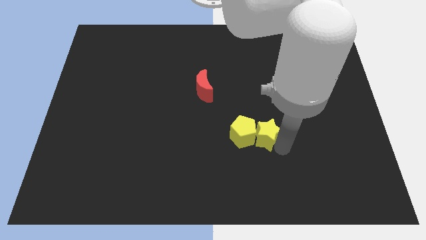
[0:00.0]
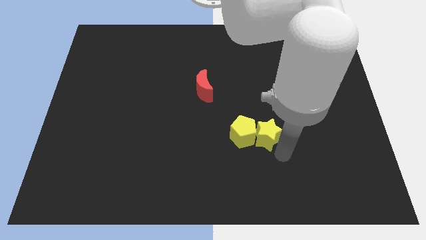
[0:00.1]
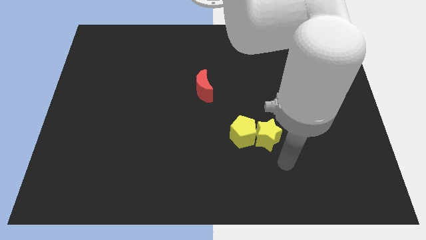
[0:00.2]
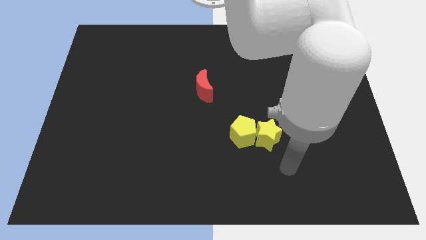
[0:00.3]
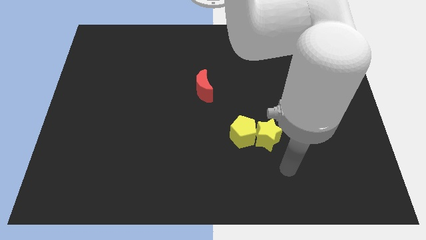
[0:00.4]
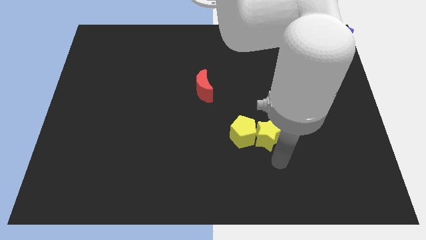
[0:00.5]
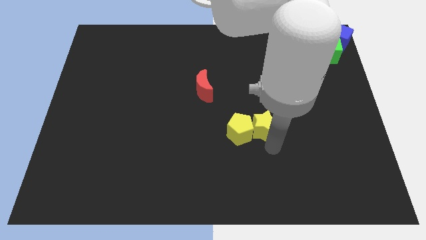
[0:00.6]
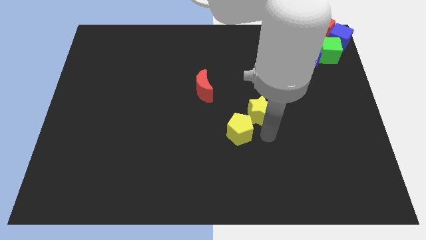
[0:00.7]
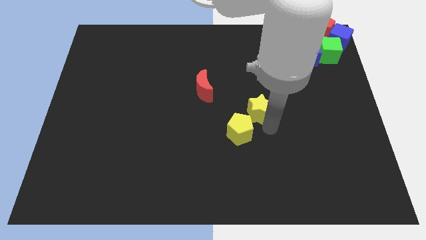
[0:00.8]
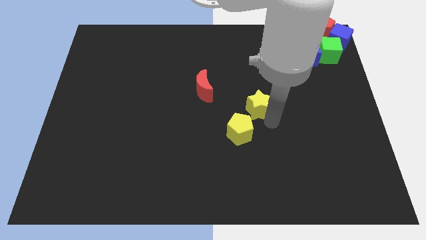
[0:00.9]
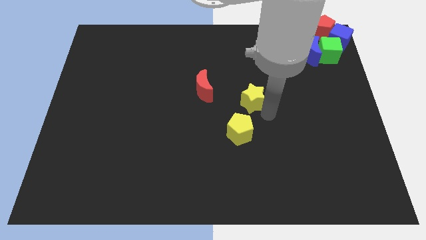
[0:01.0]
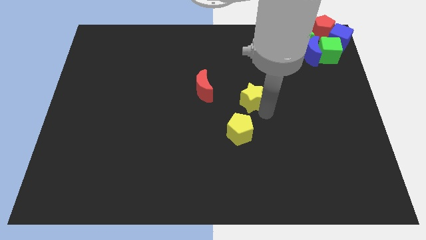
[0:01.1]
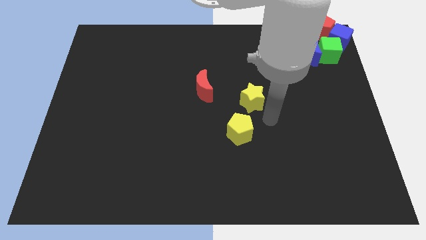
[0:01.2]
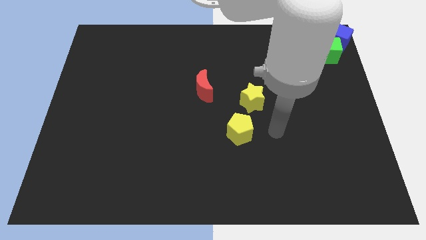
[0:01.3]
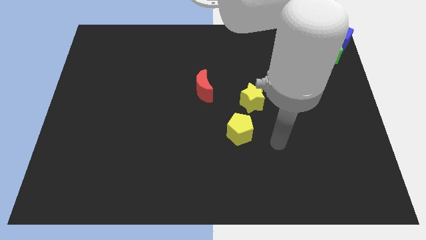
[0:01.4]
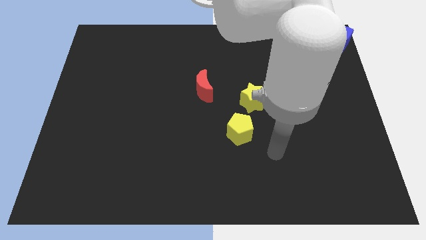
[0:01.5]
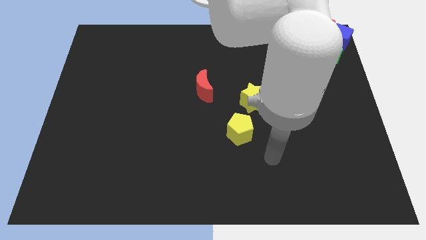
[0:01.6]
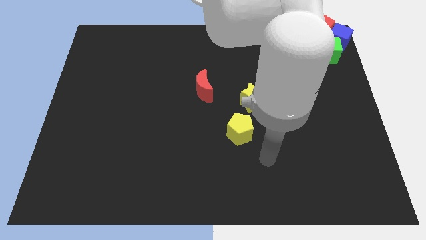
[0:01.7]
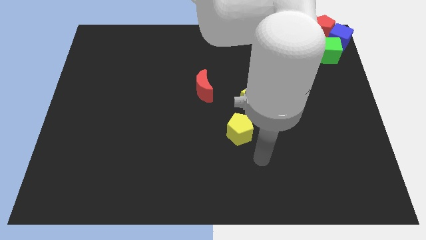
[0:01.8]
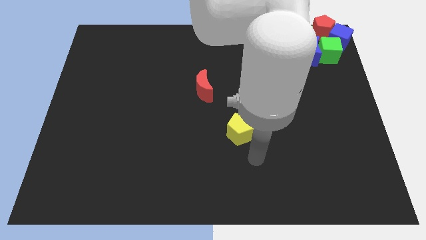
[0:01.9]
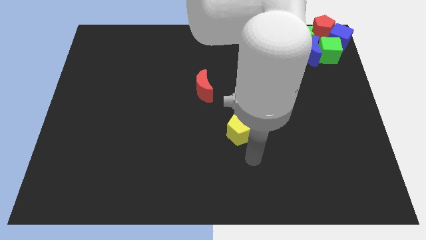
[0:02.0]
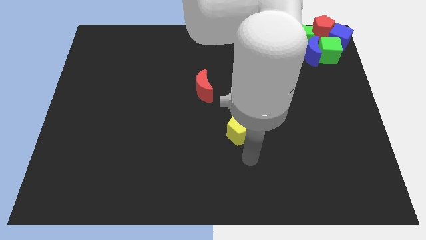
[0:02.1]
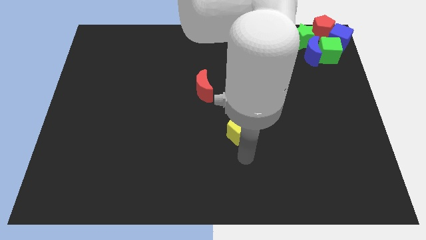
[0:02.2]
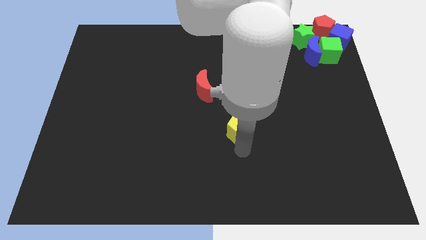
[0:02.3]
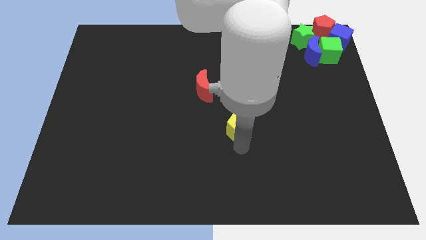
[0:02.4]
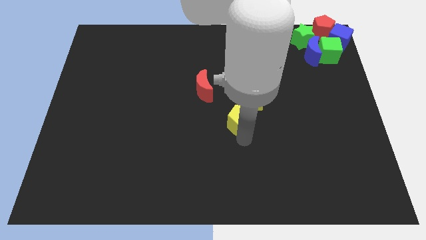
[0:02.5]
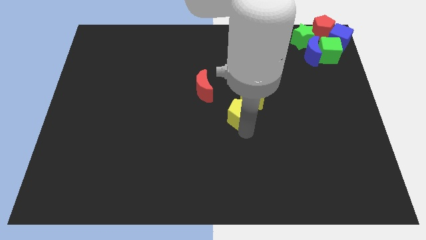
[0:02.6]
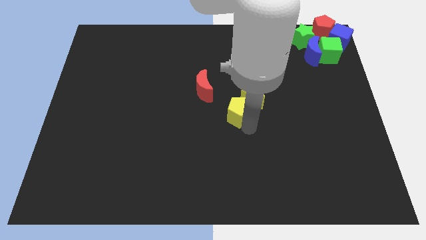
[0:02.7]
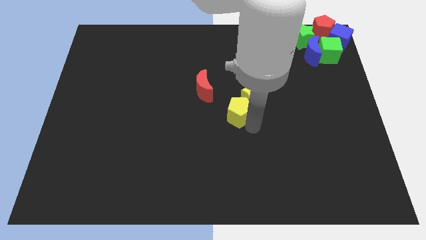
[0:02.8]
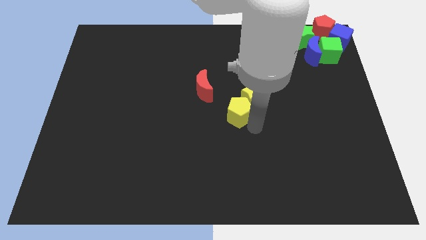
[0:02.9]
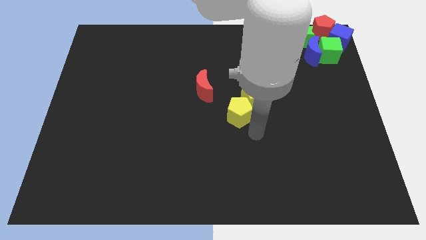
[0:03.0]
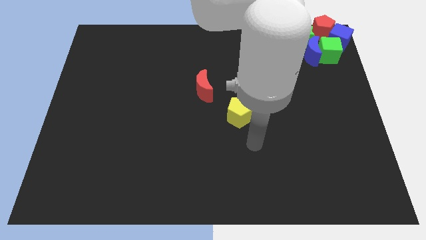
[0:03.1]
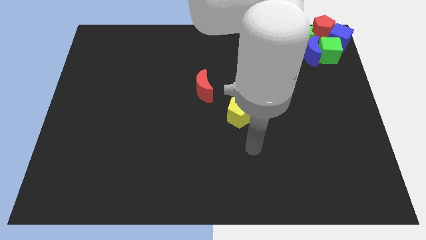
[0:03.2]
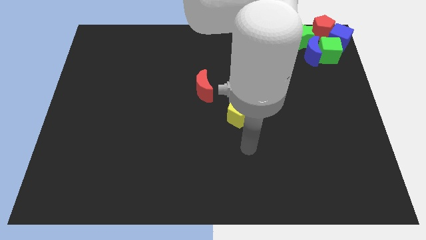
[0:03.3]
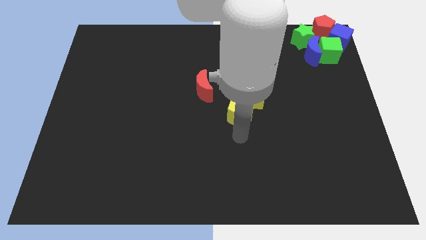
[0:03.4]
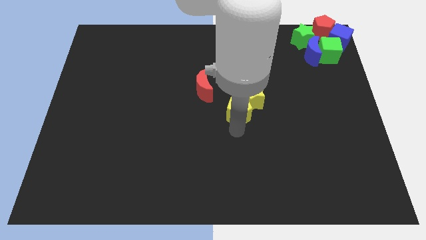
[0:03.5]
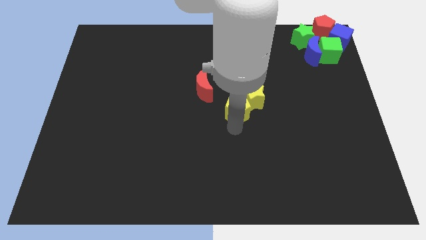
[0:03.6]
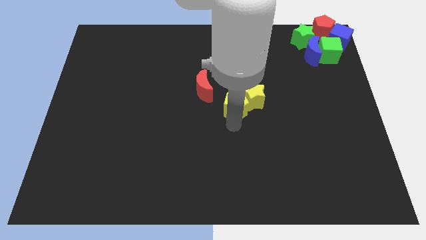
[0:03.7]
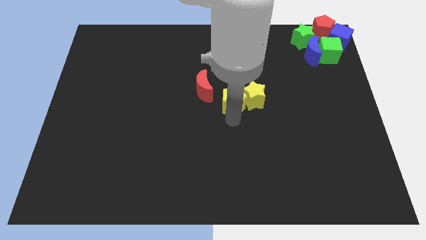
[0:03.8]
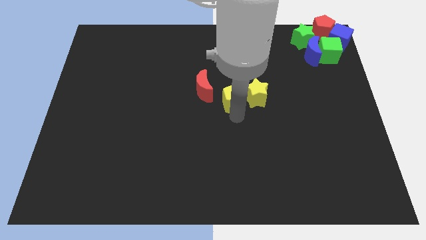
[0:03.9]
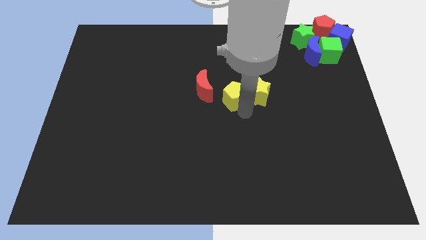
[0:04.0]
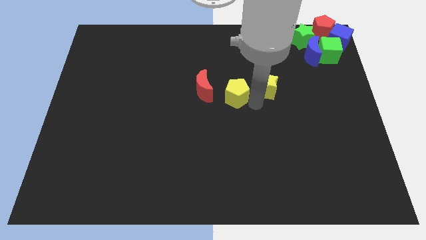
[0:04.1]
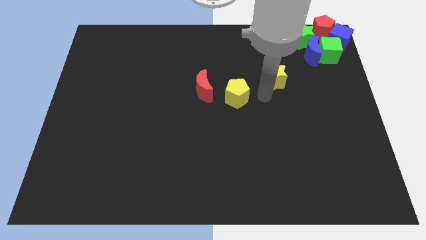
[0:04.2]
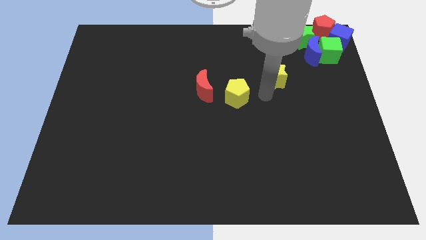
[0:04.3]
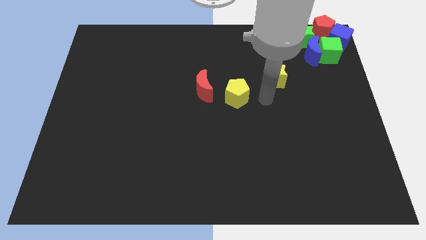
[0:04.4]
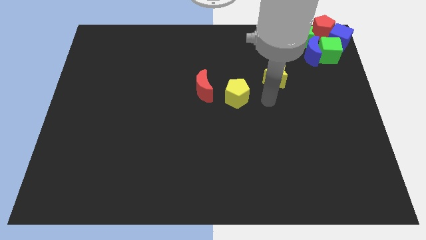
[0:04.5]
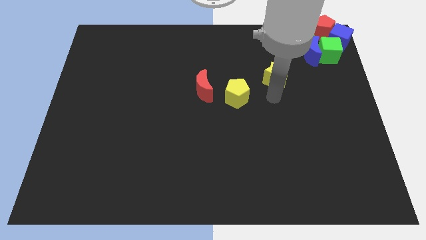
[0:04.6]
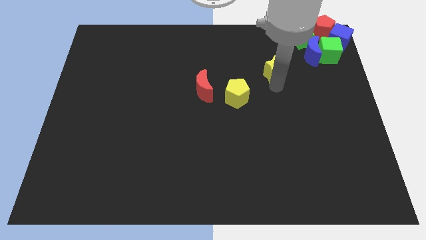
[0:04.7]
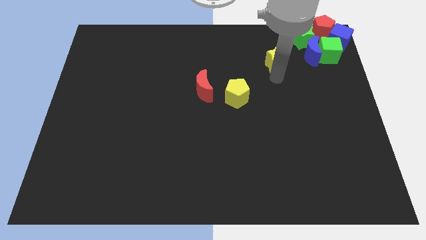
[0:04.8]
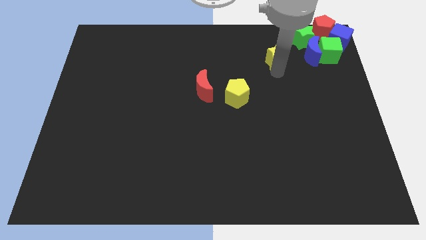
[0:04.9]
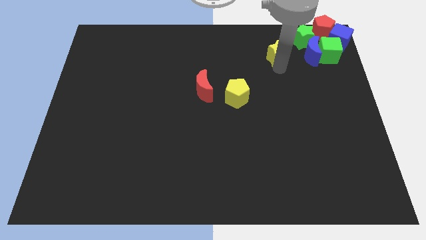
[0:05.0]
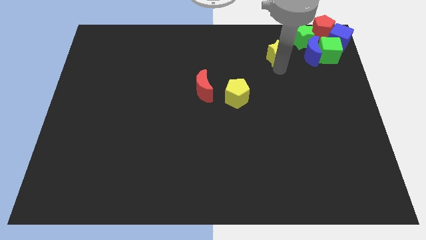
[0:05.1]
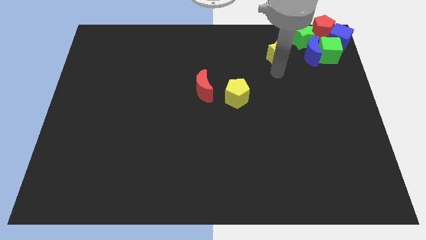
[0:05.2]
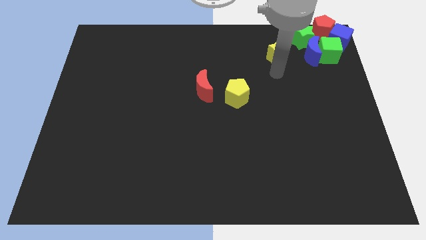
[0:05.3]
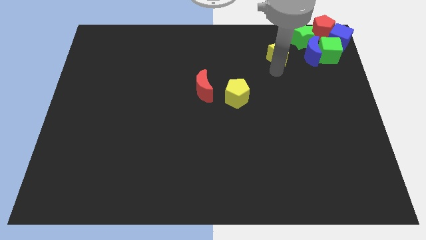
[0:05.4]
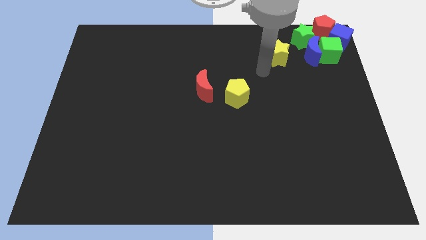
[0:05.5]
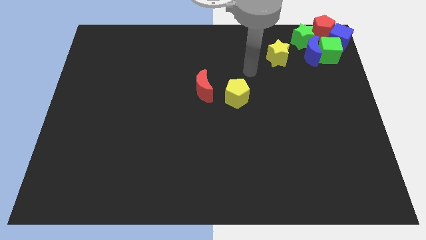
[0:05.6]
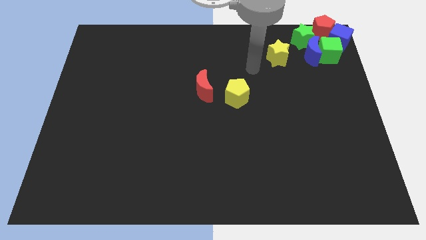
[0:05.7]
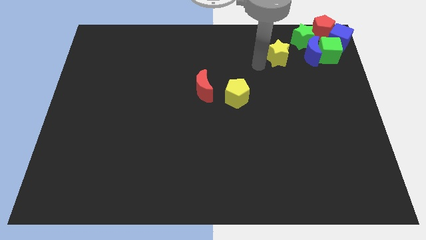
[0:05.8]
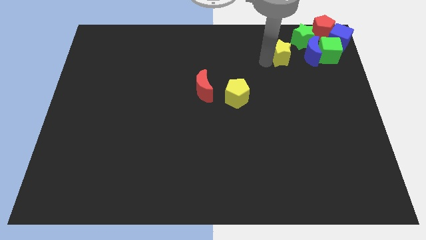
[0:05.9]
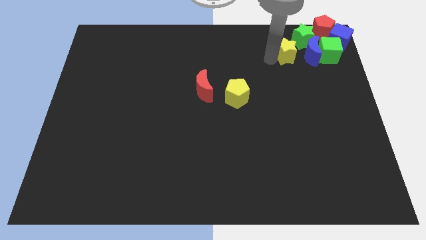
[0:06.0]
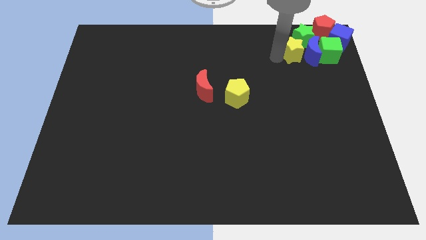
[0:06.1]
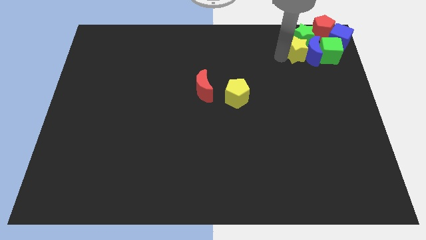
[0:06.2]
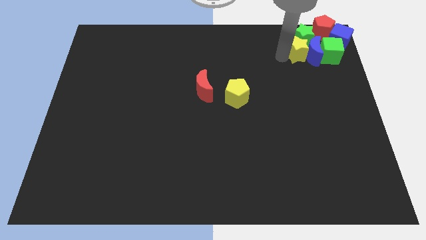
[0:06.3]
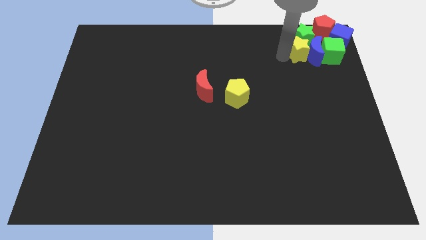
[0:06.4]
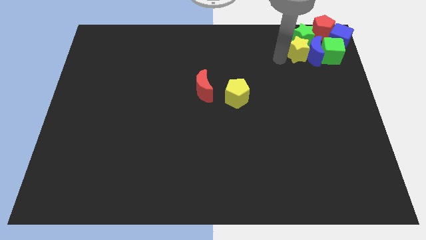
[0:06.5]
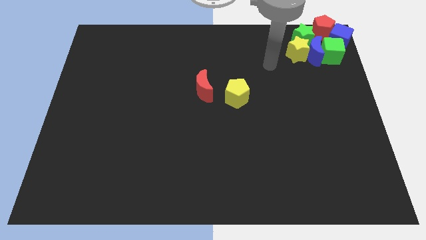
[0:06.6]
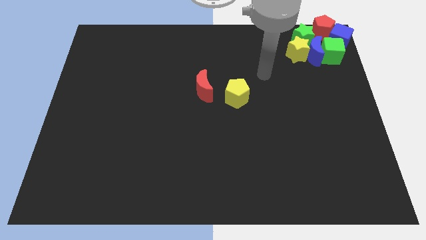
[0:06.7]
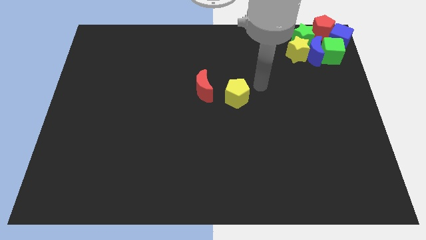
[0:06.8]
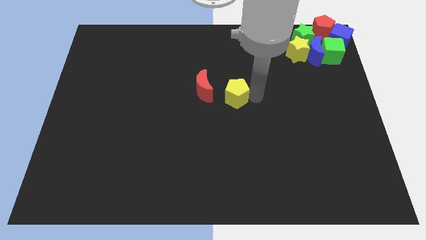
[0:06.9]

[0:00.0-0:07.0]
place the yellow star below the green star

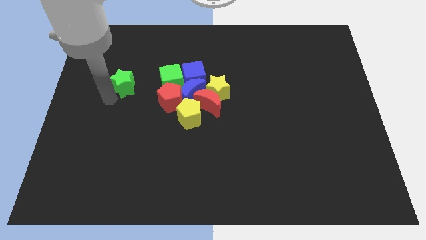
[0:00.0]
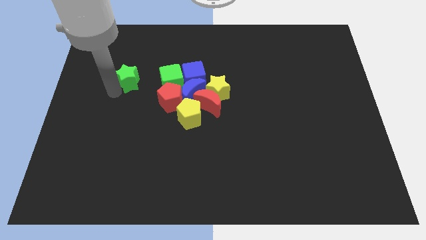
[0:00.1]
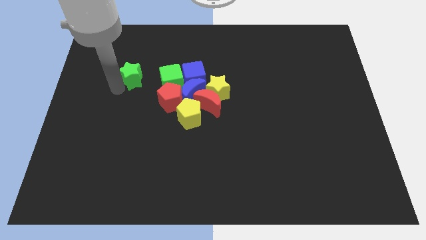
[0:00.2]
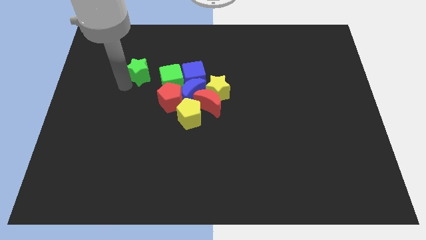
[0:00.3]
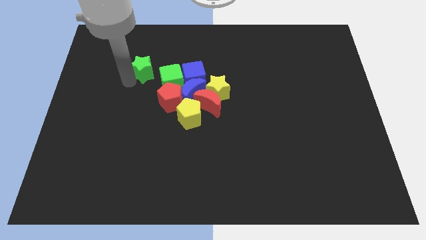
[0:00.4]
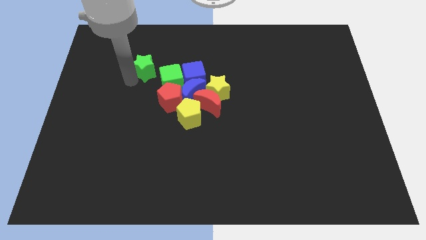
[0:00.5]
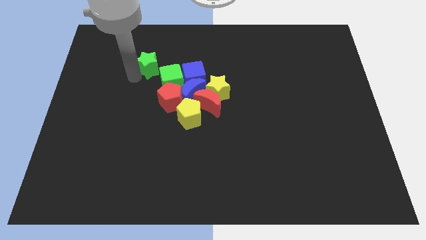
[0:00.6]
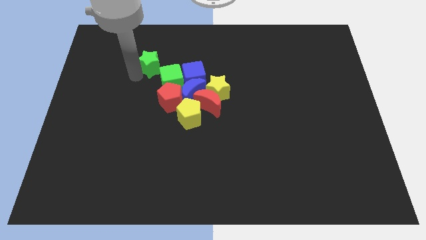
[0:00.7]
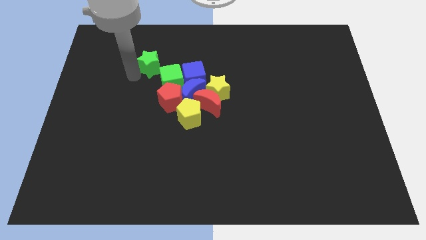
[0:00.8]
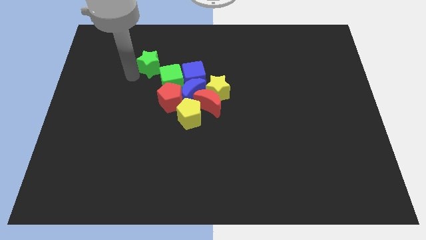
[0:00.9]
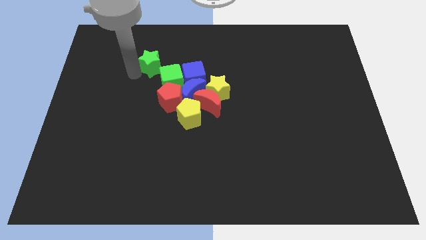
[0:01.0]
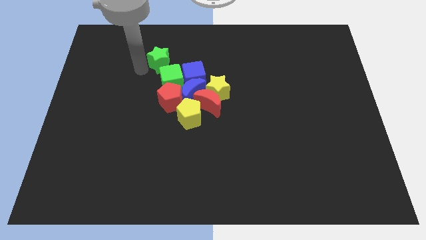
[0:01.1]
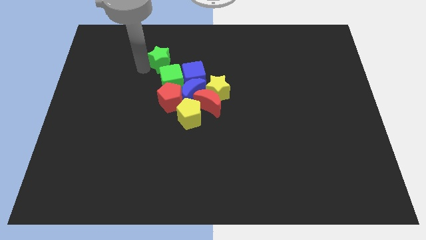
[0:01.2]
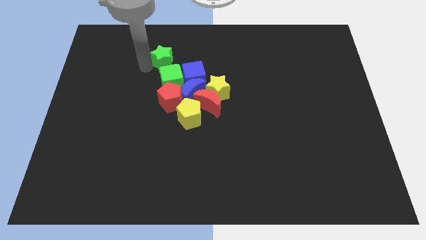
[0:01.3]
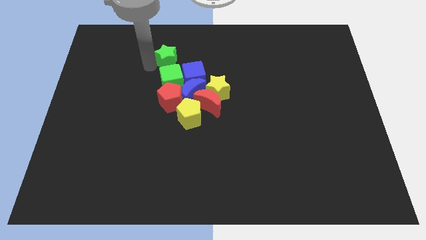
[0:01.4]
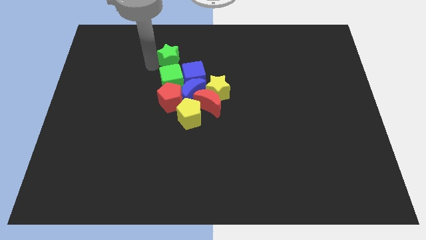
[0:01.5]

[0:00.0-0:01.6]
push the green star to the top of the green cube

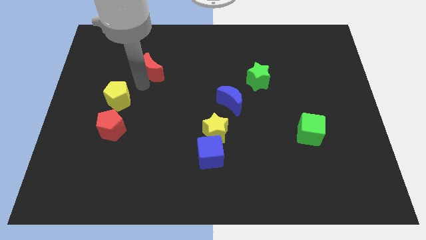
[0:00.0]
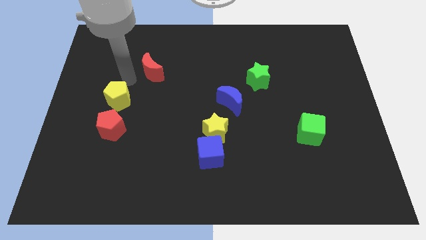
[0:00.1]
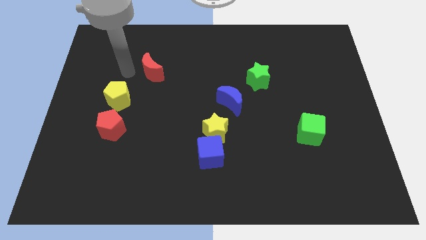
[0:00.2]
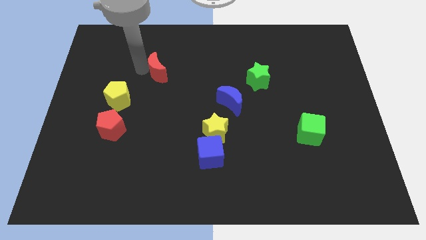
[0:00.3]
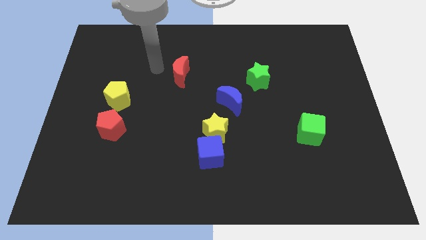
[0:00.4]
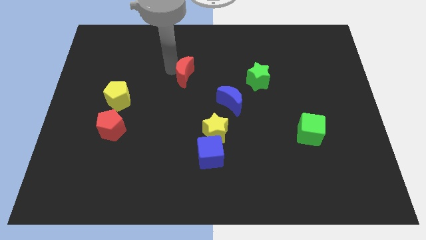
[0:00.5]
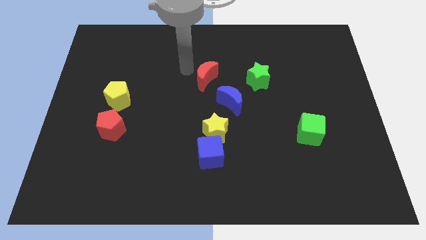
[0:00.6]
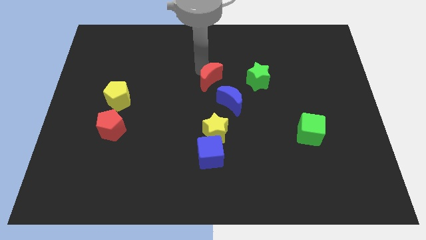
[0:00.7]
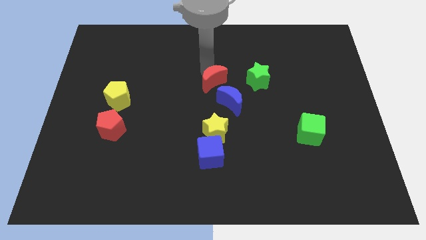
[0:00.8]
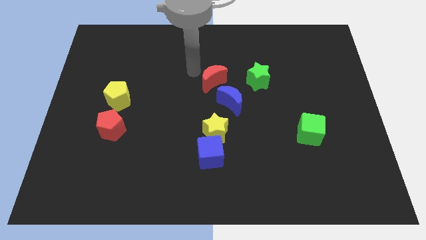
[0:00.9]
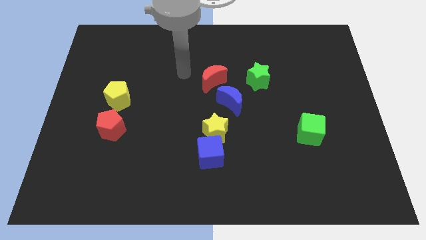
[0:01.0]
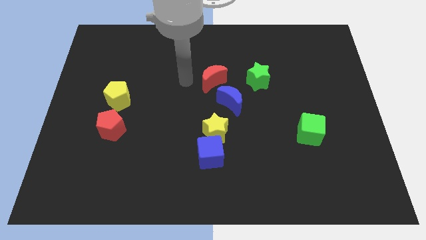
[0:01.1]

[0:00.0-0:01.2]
push the red moon close to the blue moon
